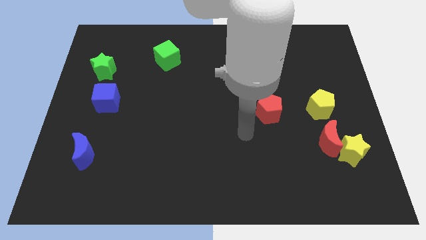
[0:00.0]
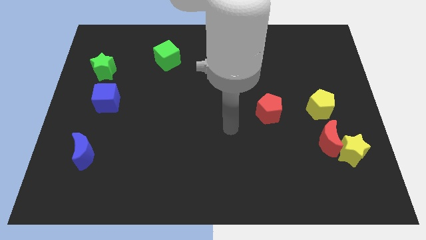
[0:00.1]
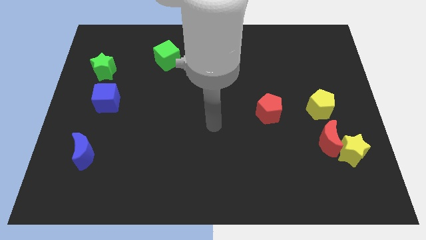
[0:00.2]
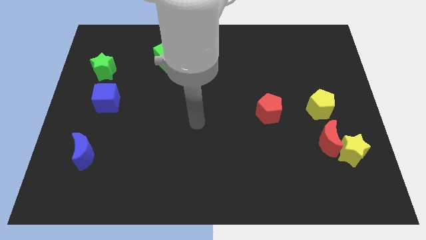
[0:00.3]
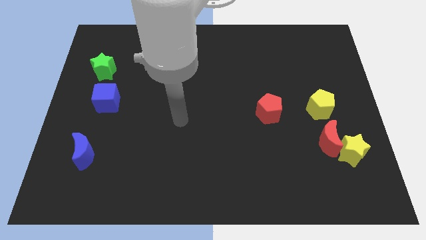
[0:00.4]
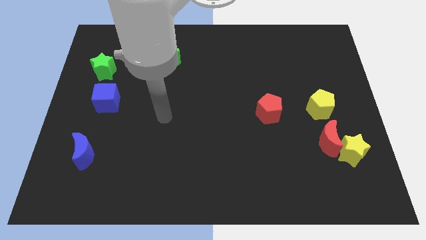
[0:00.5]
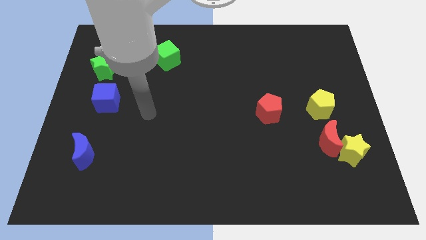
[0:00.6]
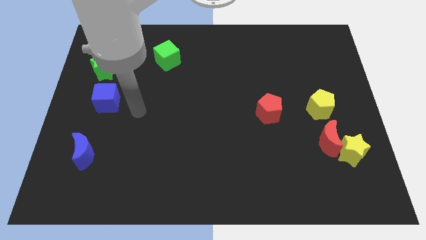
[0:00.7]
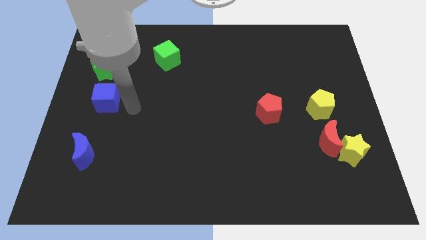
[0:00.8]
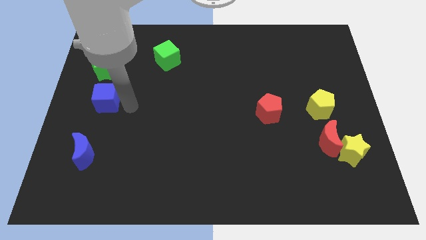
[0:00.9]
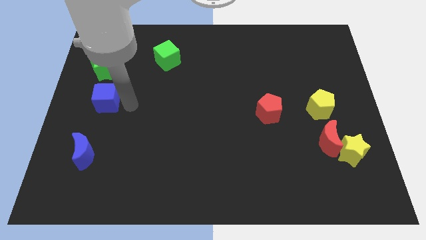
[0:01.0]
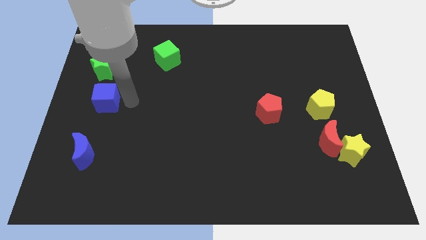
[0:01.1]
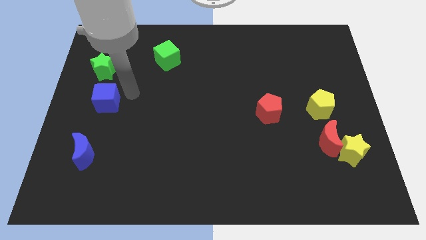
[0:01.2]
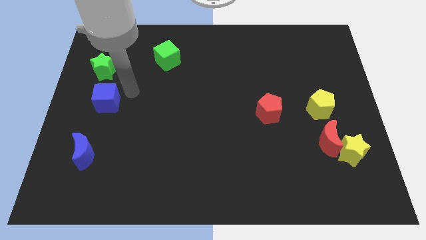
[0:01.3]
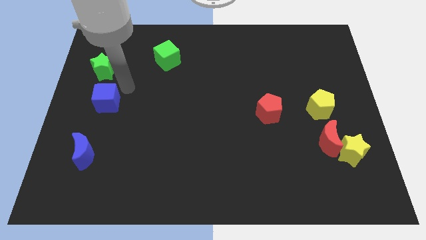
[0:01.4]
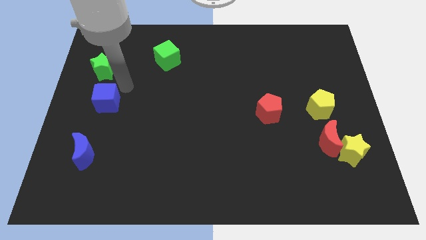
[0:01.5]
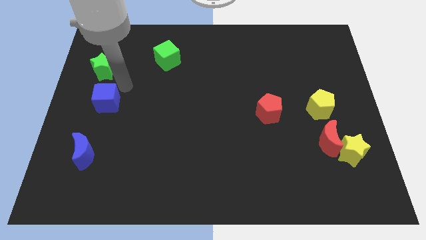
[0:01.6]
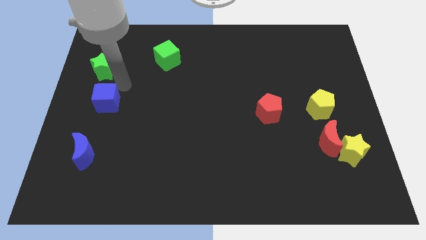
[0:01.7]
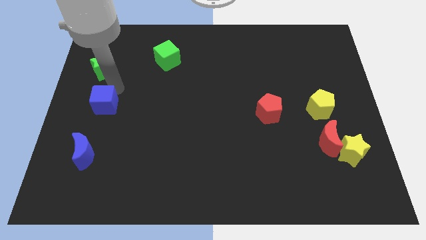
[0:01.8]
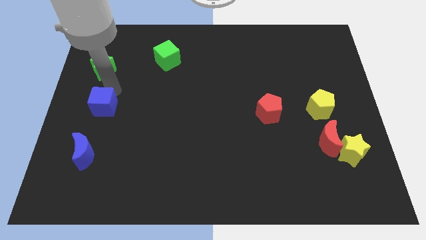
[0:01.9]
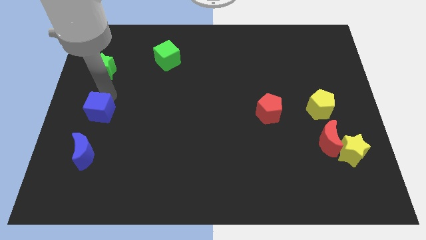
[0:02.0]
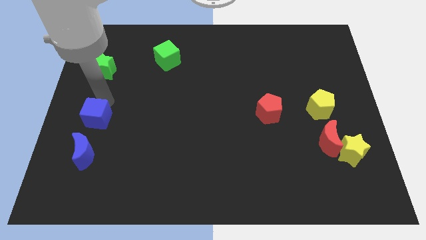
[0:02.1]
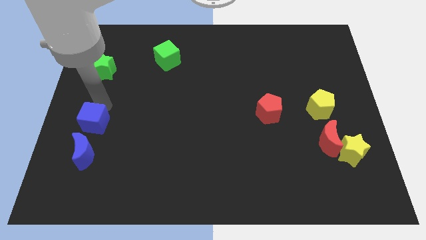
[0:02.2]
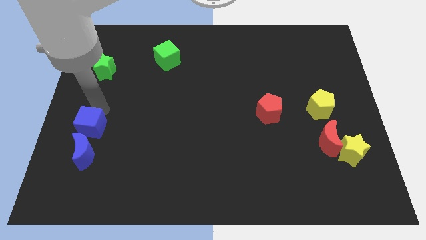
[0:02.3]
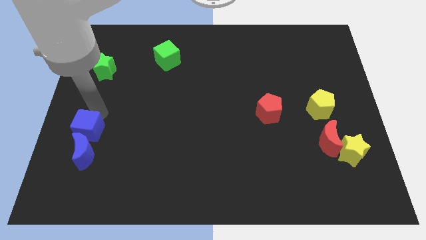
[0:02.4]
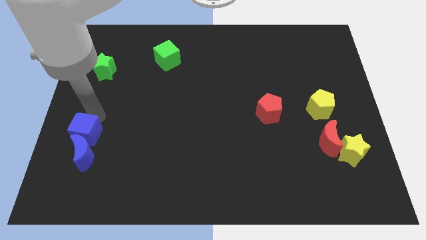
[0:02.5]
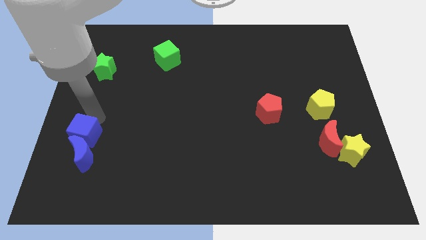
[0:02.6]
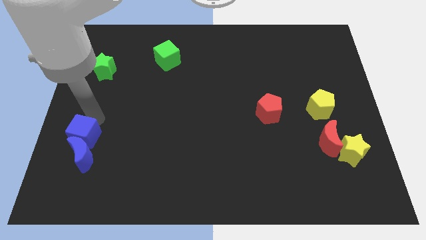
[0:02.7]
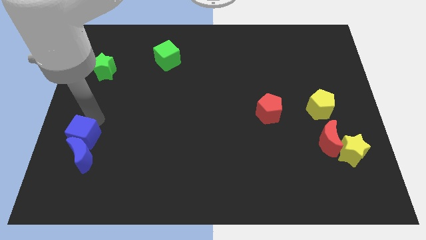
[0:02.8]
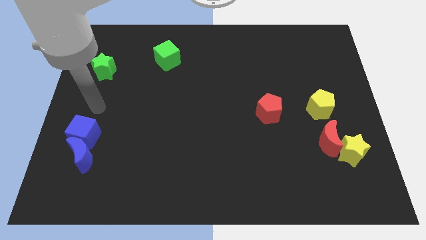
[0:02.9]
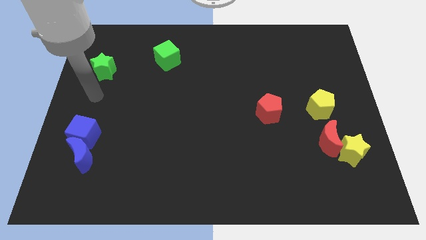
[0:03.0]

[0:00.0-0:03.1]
push the blue cube at the top of the blue crescent

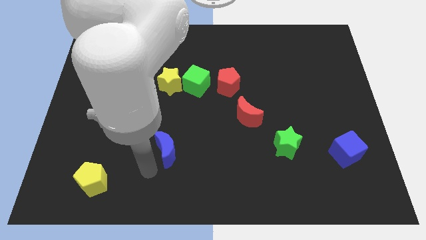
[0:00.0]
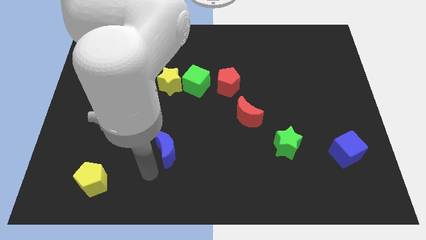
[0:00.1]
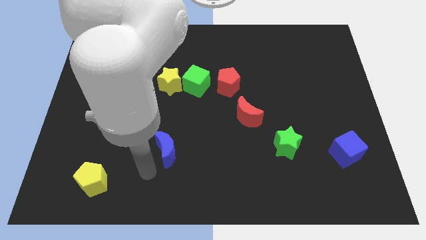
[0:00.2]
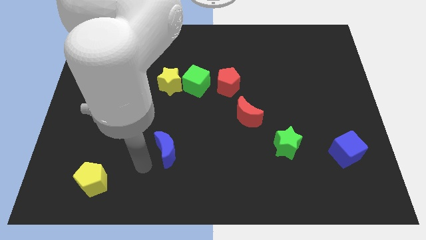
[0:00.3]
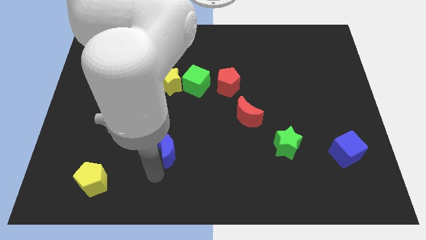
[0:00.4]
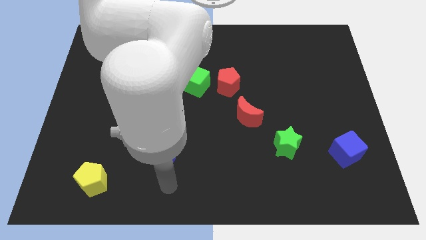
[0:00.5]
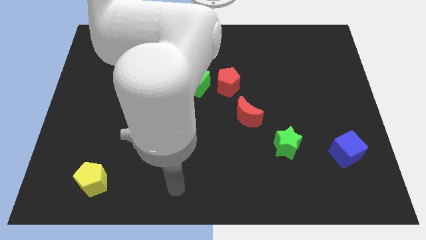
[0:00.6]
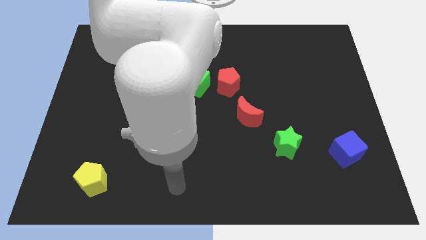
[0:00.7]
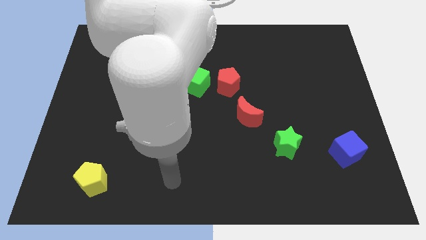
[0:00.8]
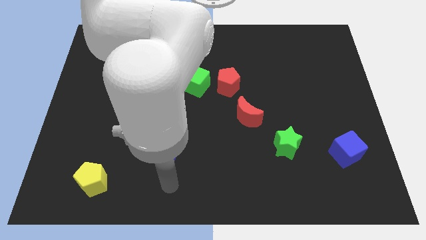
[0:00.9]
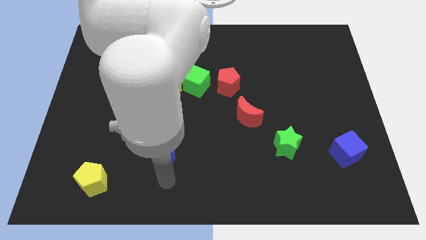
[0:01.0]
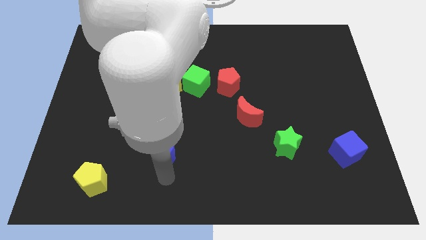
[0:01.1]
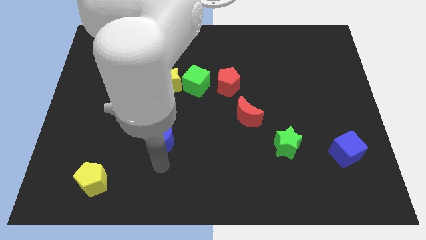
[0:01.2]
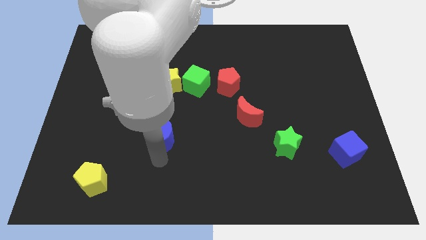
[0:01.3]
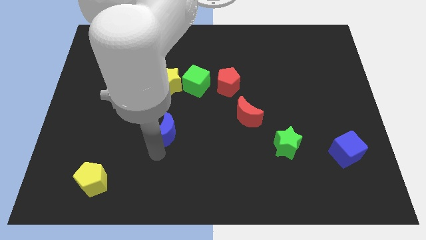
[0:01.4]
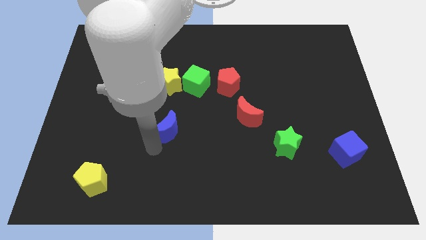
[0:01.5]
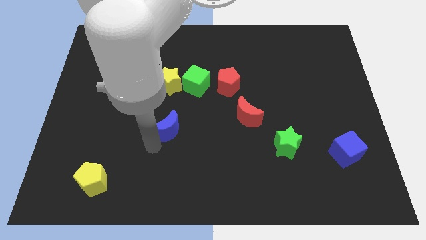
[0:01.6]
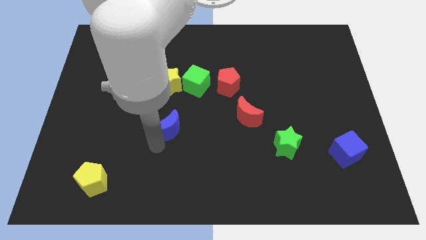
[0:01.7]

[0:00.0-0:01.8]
slightly move the blue crescent towards yellow star

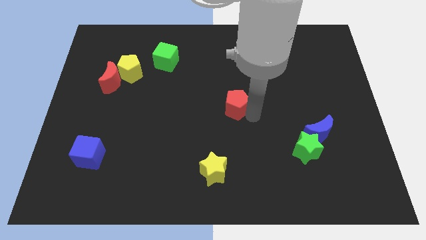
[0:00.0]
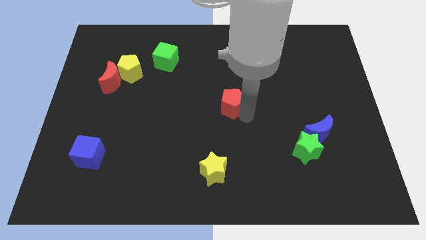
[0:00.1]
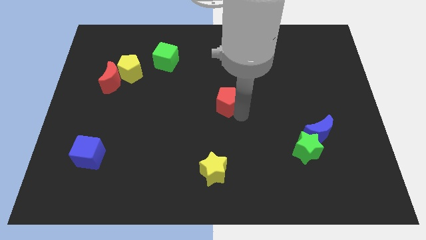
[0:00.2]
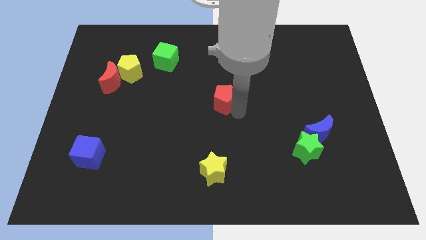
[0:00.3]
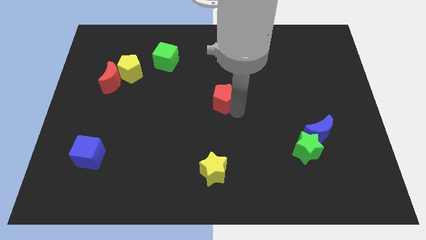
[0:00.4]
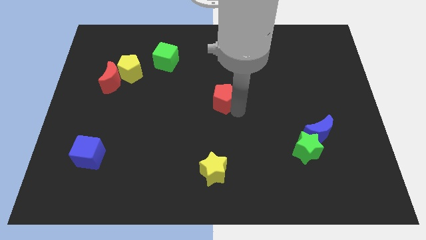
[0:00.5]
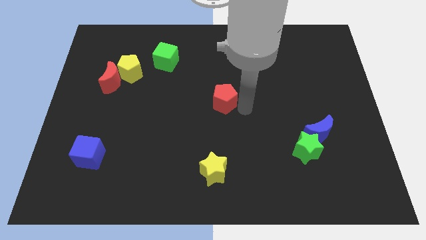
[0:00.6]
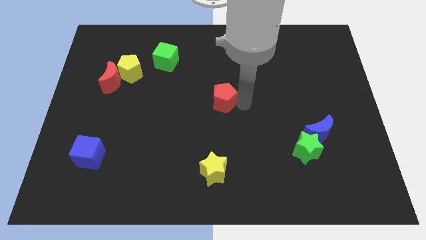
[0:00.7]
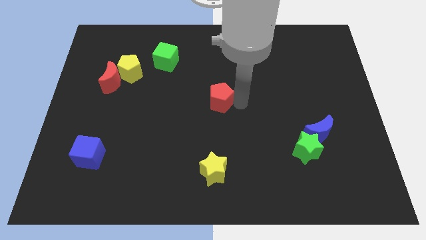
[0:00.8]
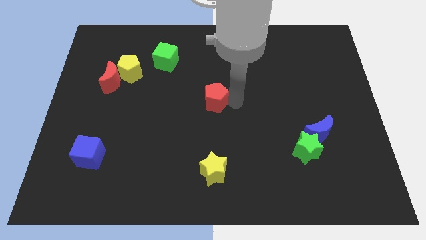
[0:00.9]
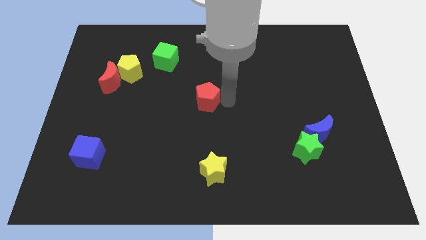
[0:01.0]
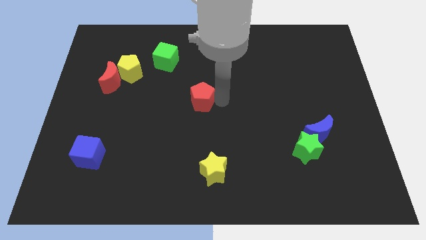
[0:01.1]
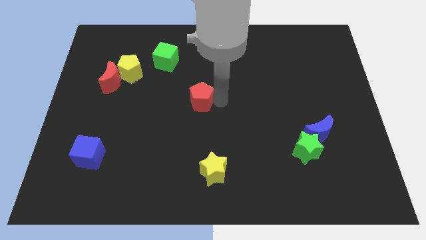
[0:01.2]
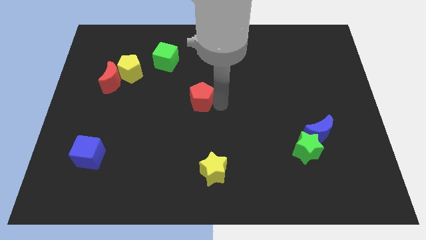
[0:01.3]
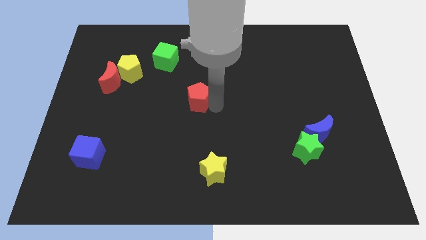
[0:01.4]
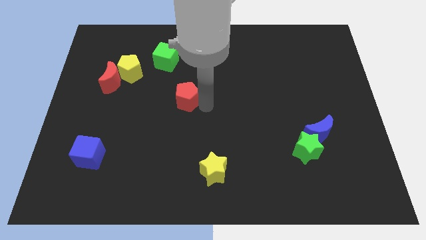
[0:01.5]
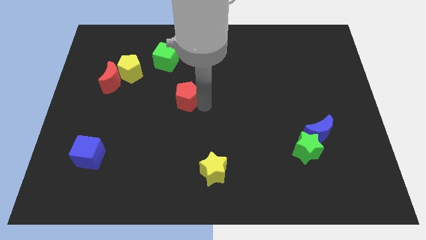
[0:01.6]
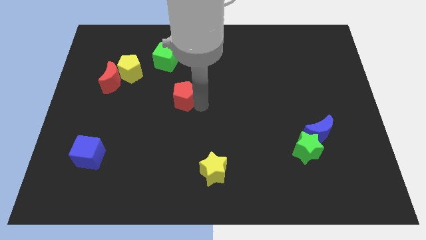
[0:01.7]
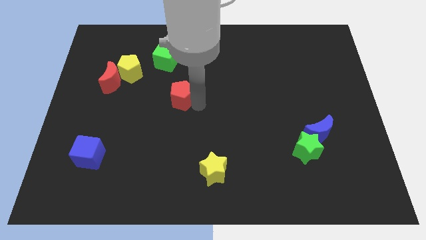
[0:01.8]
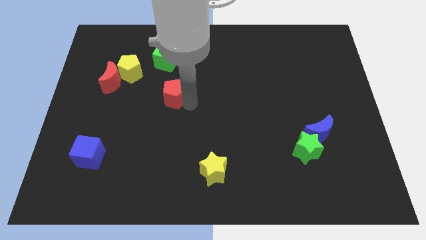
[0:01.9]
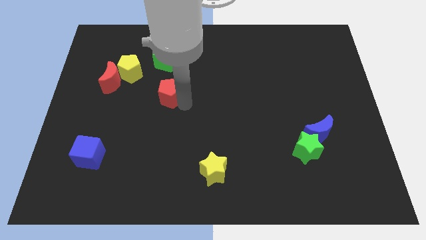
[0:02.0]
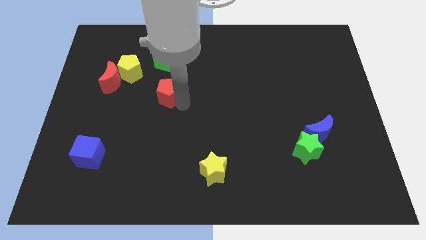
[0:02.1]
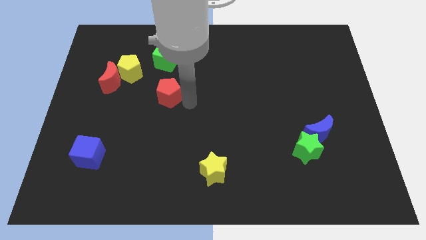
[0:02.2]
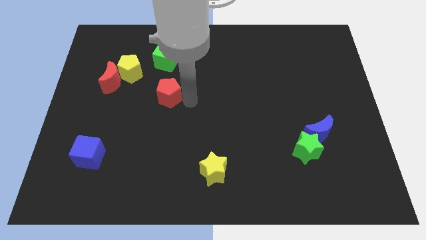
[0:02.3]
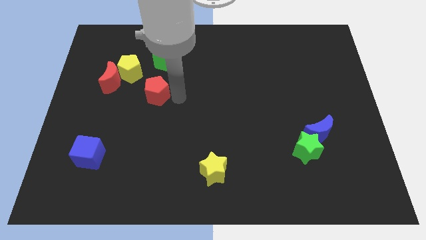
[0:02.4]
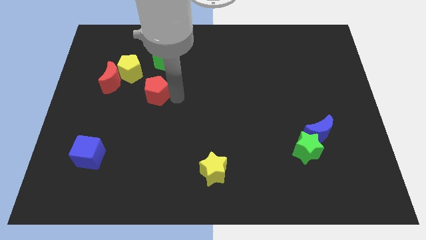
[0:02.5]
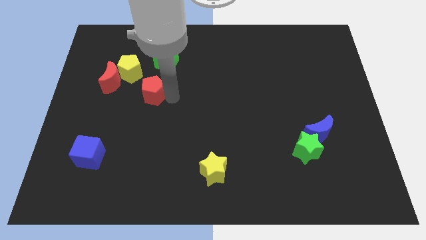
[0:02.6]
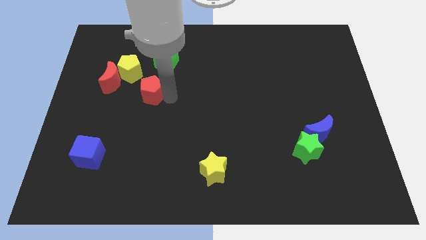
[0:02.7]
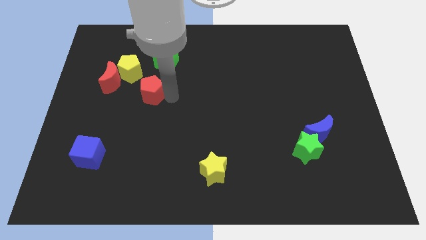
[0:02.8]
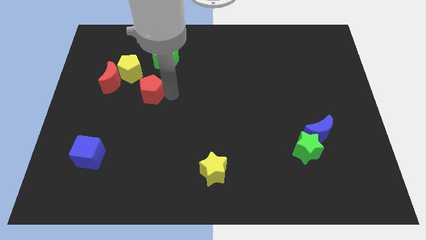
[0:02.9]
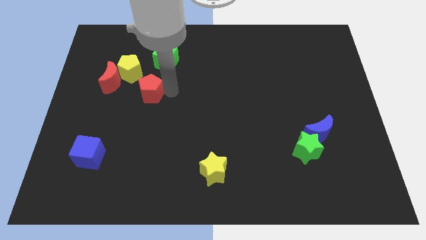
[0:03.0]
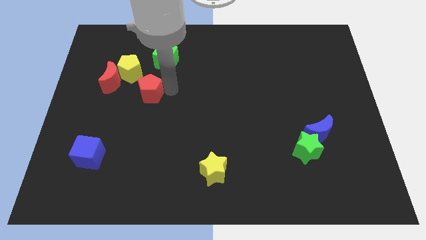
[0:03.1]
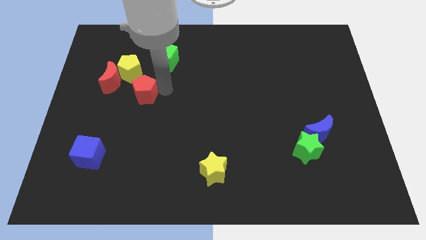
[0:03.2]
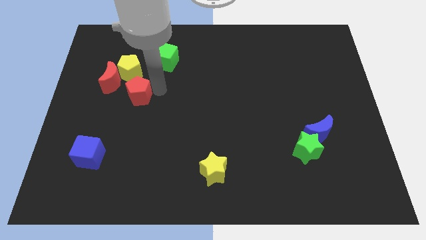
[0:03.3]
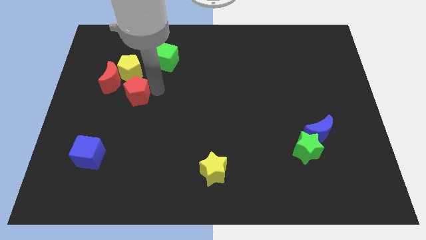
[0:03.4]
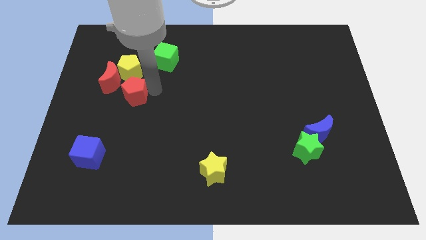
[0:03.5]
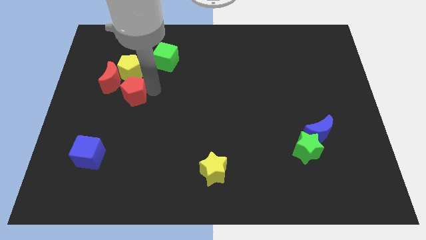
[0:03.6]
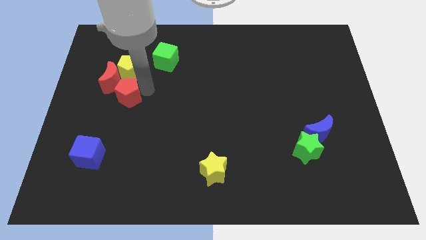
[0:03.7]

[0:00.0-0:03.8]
move the red pentagon to the bottom of the yellow pentagon

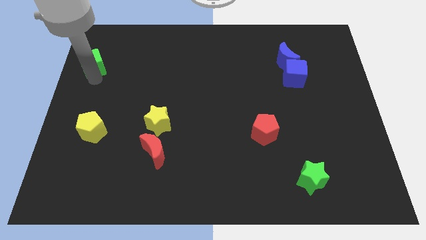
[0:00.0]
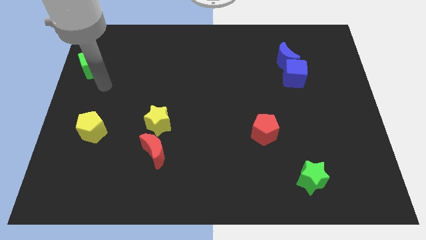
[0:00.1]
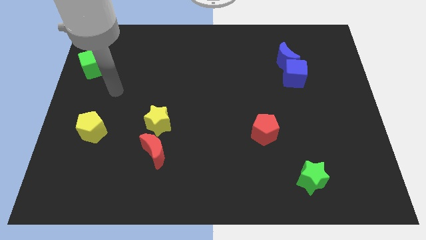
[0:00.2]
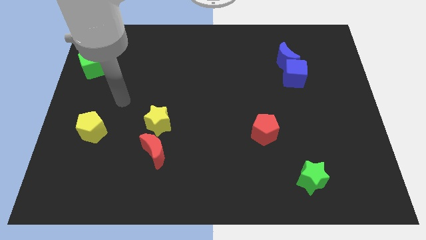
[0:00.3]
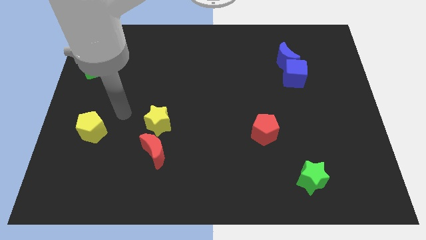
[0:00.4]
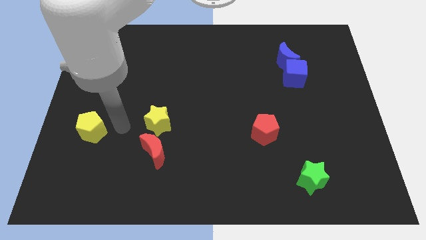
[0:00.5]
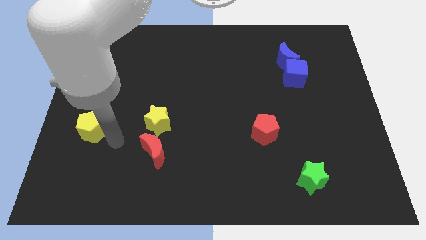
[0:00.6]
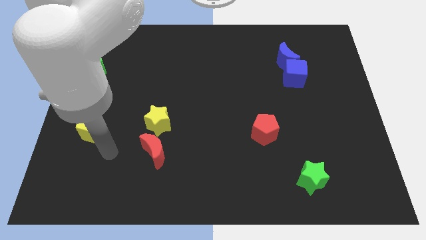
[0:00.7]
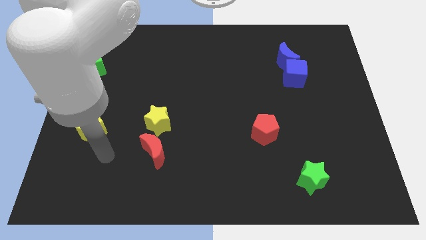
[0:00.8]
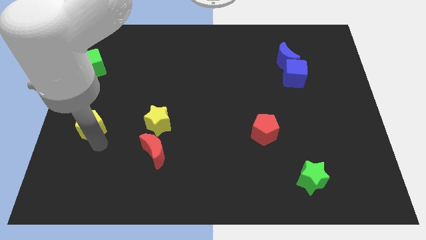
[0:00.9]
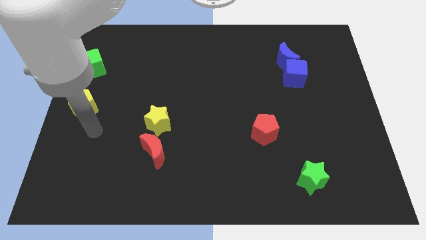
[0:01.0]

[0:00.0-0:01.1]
push the yellow pentagon towards the center left
